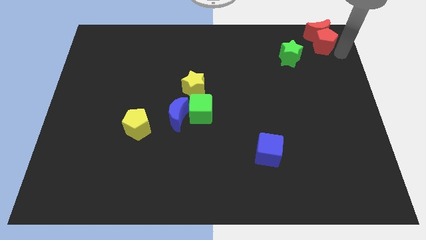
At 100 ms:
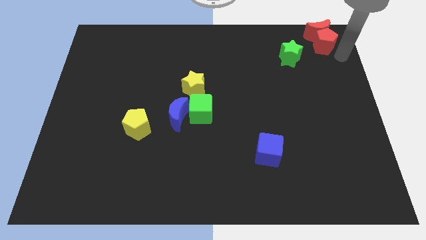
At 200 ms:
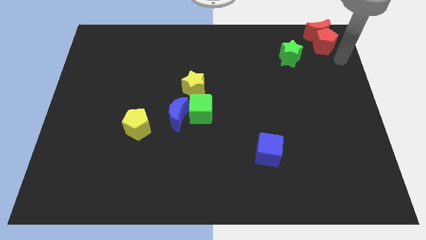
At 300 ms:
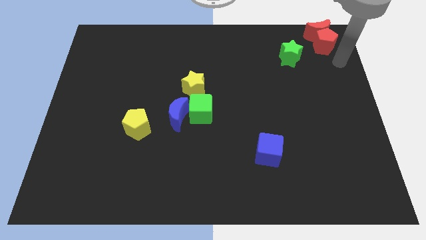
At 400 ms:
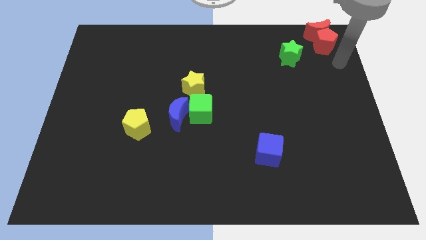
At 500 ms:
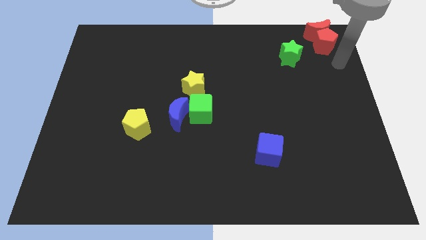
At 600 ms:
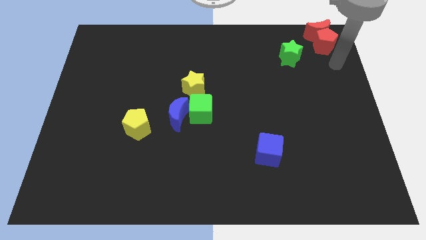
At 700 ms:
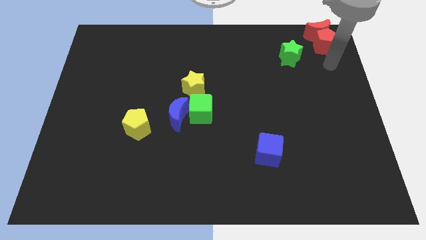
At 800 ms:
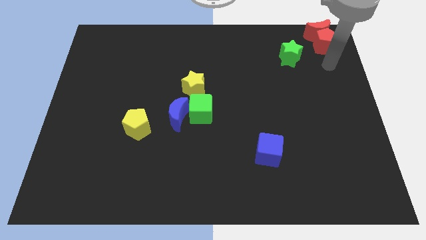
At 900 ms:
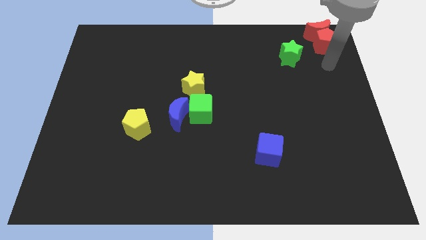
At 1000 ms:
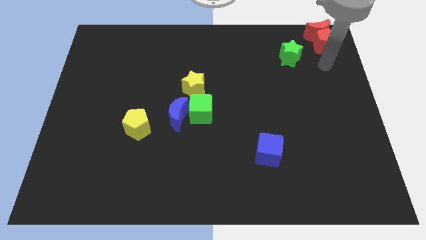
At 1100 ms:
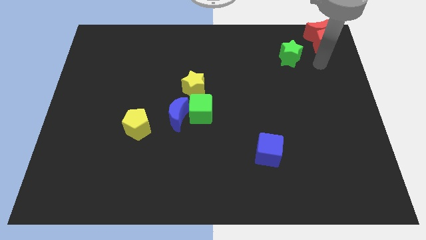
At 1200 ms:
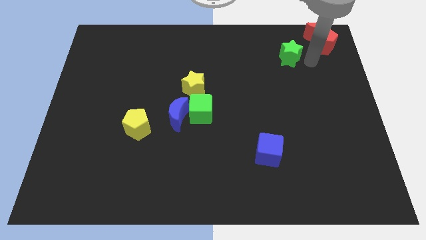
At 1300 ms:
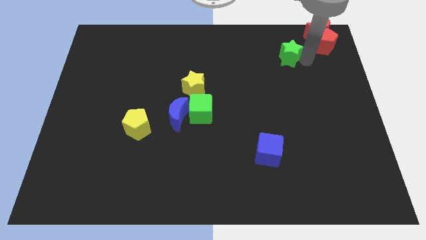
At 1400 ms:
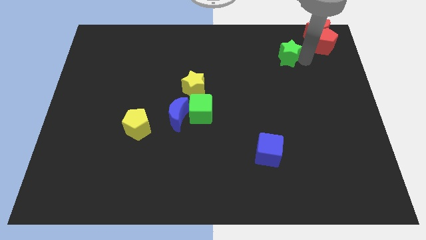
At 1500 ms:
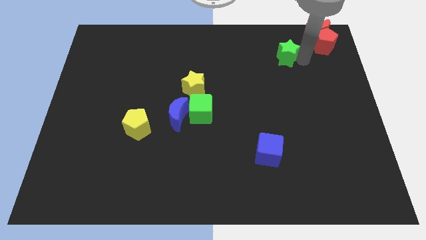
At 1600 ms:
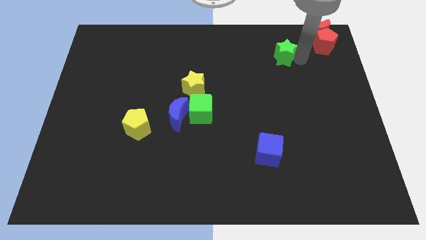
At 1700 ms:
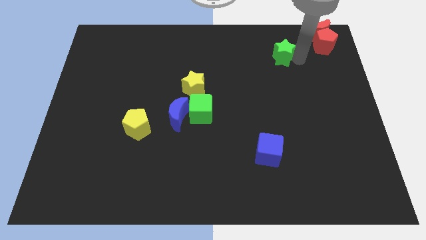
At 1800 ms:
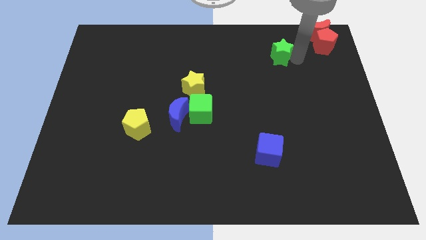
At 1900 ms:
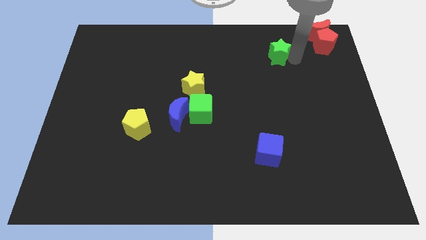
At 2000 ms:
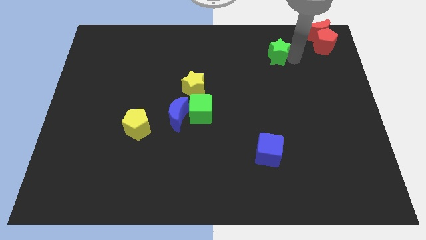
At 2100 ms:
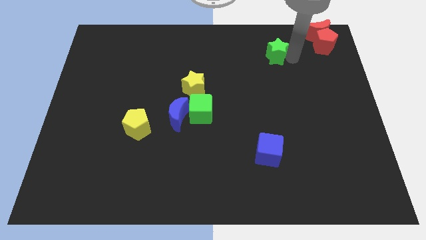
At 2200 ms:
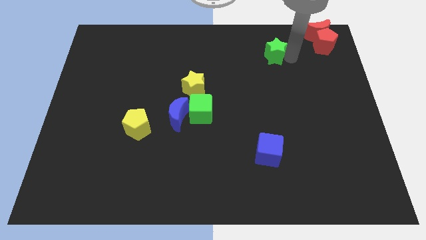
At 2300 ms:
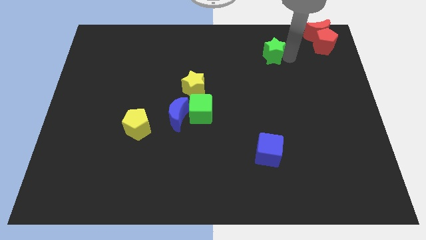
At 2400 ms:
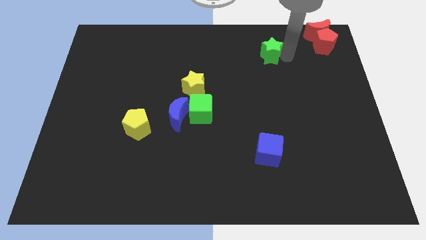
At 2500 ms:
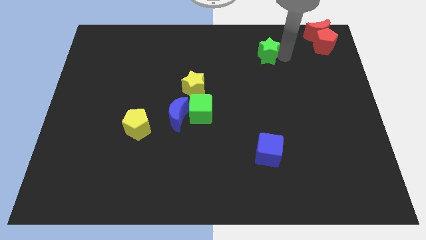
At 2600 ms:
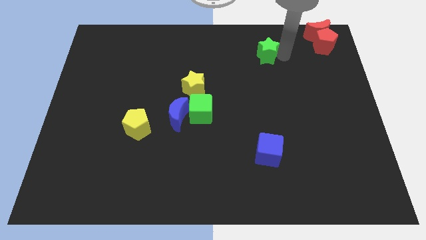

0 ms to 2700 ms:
slide the green star to the left

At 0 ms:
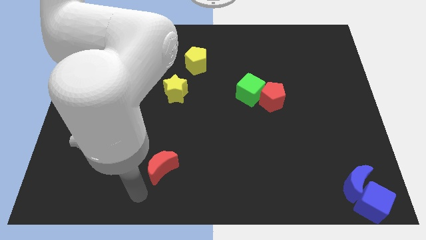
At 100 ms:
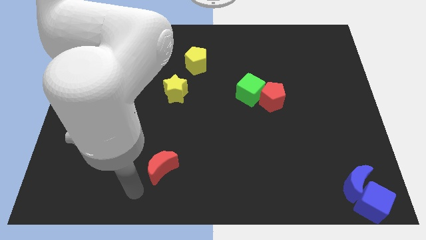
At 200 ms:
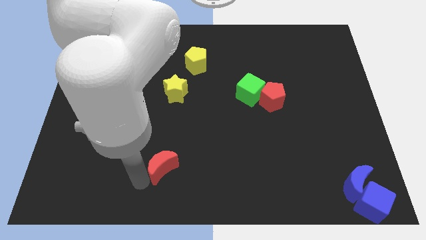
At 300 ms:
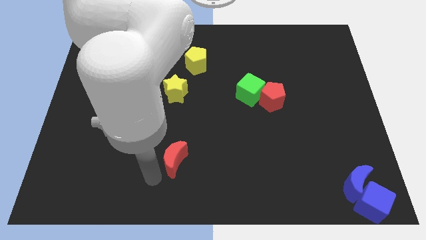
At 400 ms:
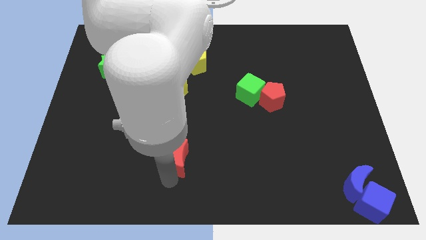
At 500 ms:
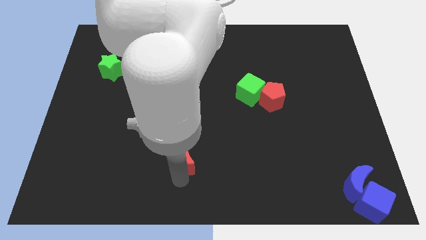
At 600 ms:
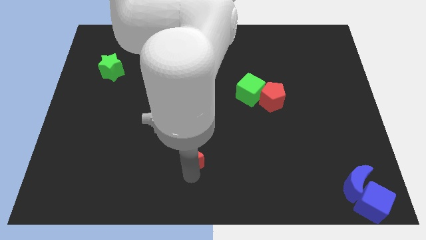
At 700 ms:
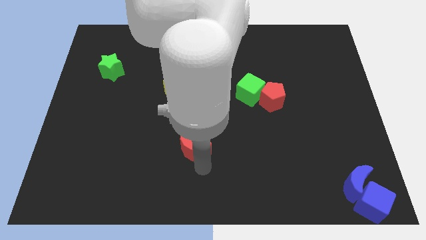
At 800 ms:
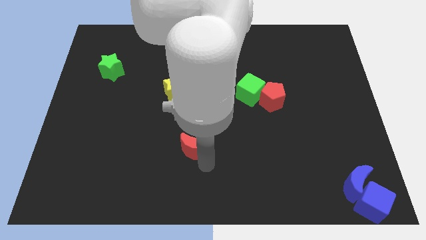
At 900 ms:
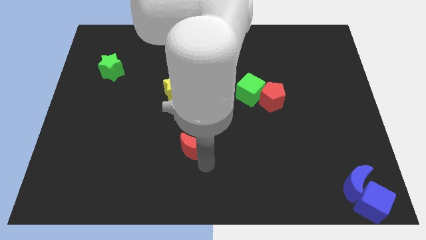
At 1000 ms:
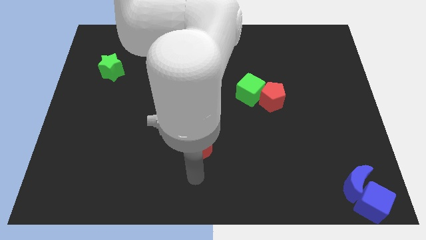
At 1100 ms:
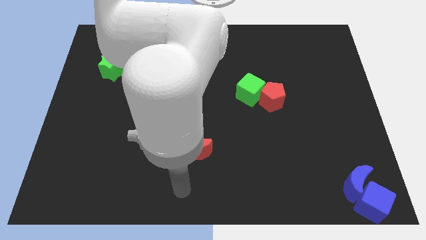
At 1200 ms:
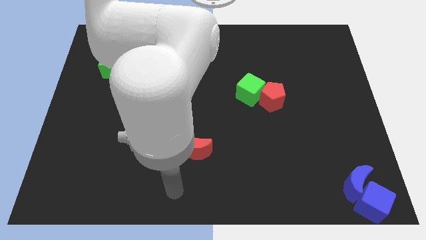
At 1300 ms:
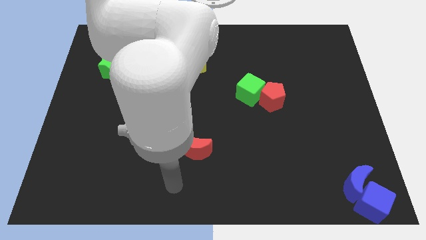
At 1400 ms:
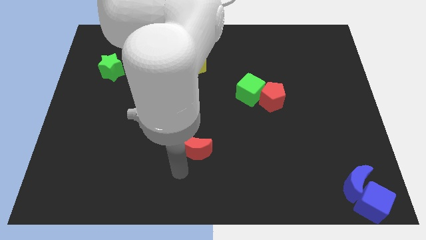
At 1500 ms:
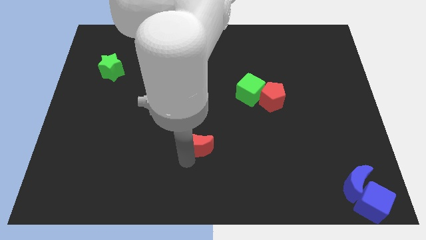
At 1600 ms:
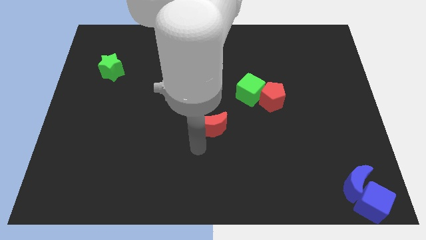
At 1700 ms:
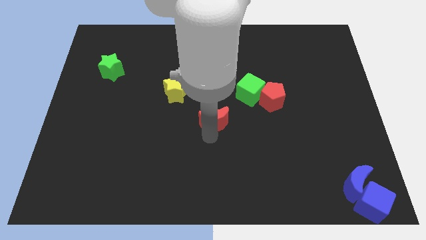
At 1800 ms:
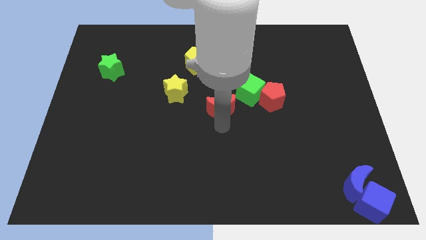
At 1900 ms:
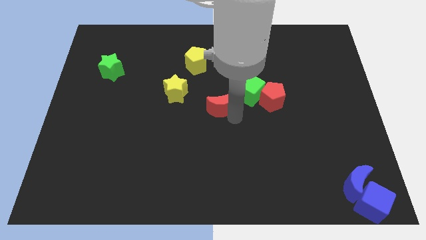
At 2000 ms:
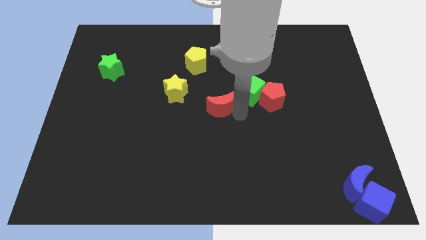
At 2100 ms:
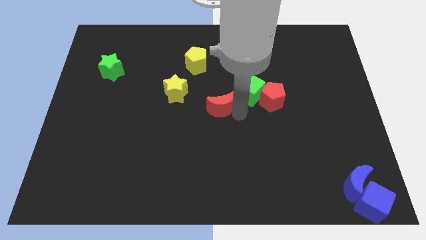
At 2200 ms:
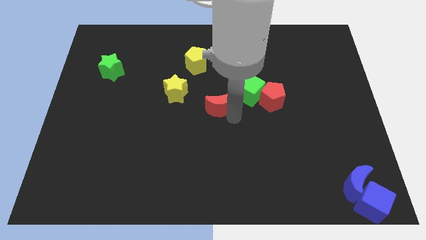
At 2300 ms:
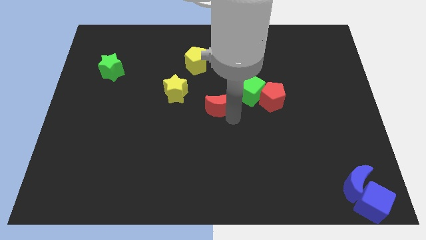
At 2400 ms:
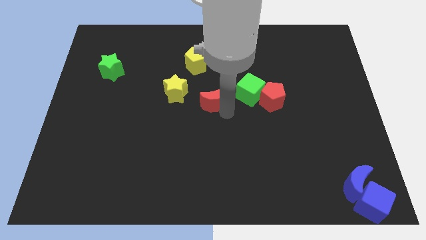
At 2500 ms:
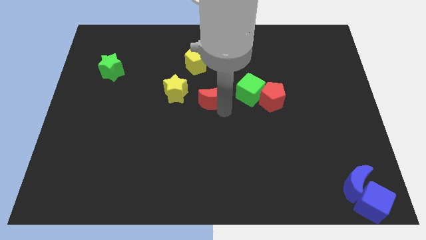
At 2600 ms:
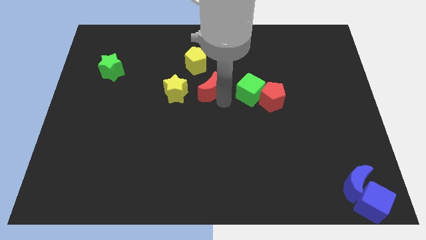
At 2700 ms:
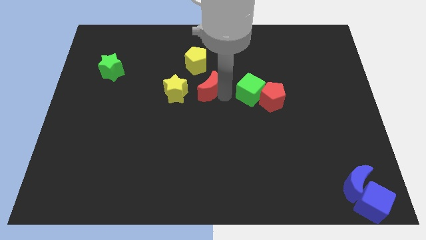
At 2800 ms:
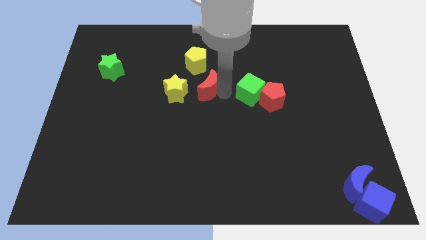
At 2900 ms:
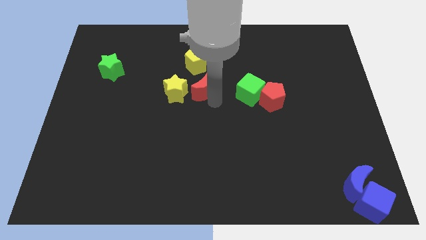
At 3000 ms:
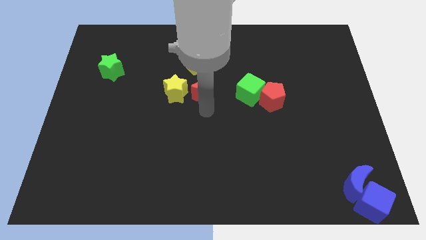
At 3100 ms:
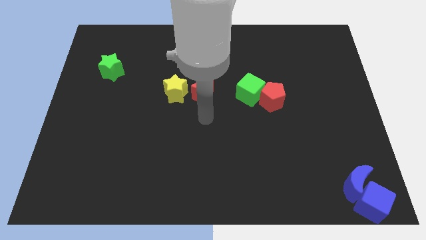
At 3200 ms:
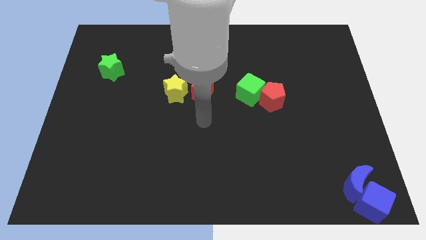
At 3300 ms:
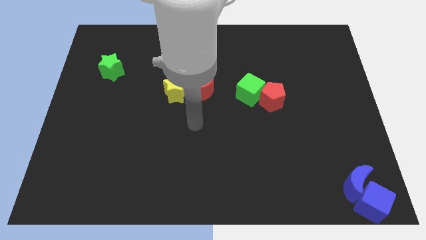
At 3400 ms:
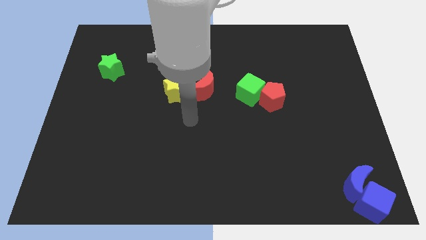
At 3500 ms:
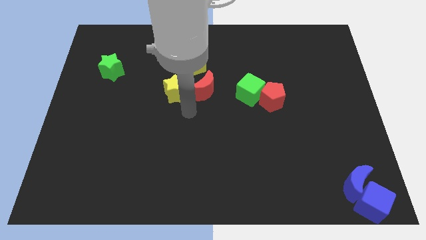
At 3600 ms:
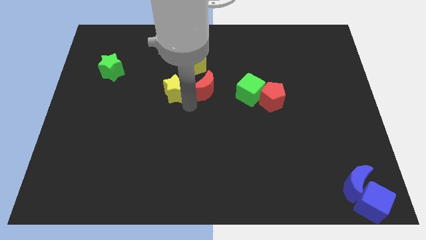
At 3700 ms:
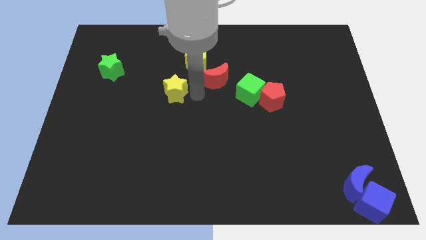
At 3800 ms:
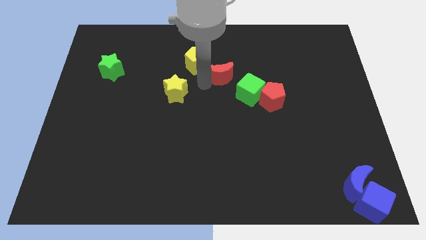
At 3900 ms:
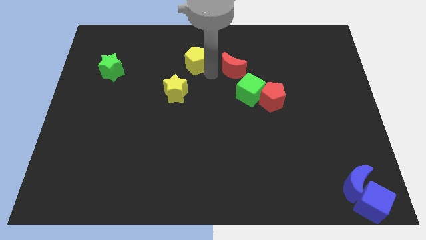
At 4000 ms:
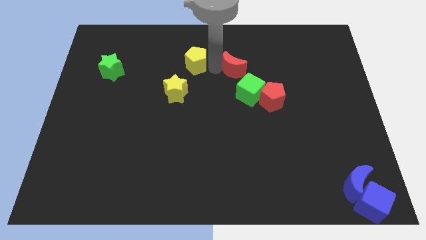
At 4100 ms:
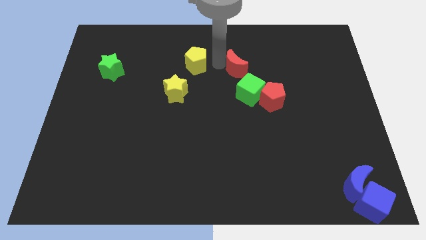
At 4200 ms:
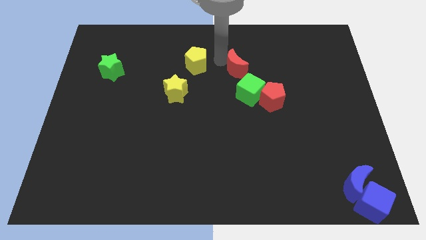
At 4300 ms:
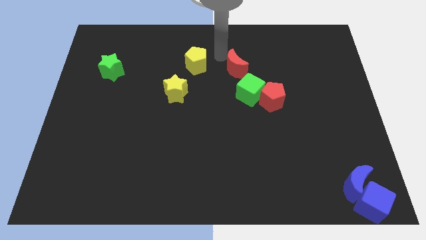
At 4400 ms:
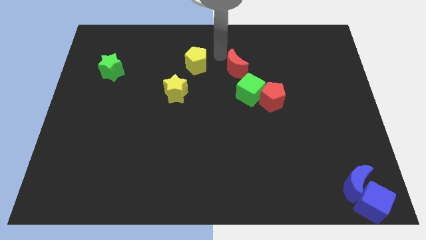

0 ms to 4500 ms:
place the red moon right to the yellow pentagon

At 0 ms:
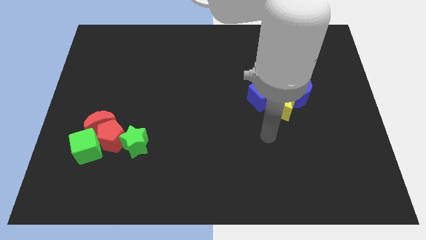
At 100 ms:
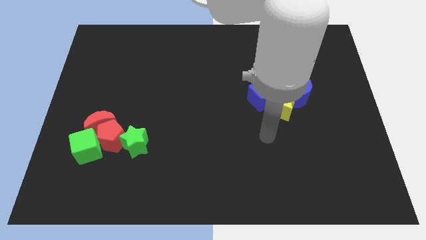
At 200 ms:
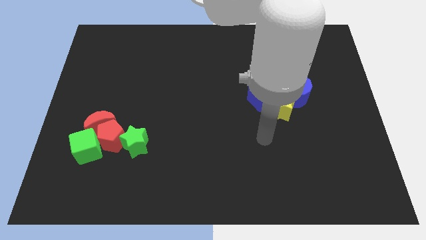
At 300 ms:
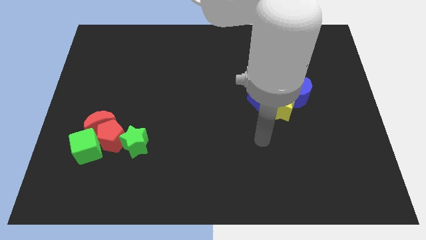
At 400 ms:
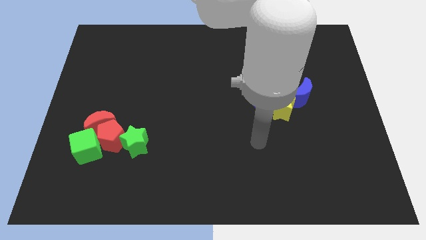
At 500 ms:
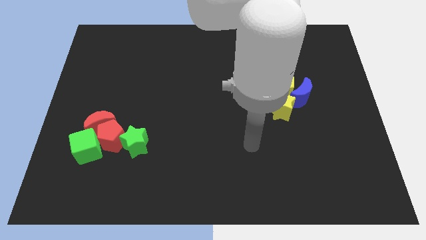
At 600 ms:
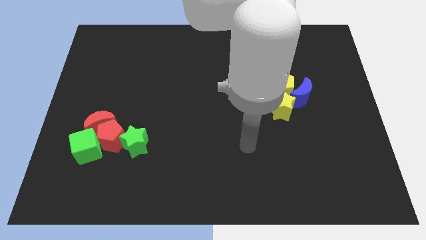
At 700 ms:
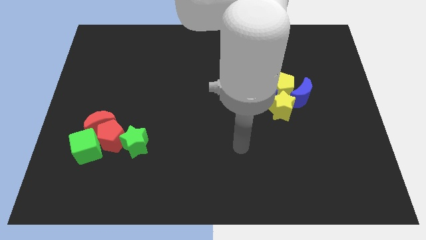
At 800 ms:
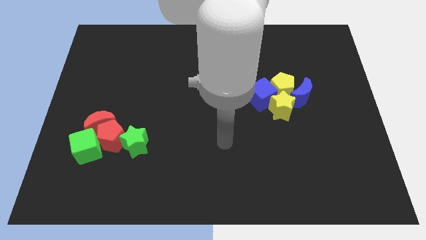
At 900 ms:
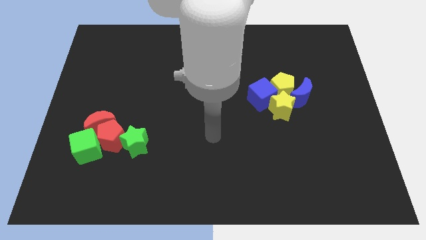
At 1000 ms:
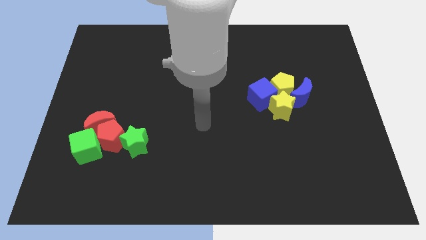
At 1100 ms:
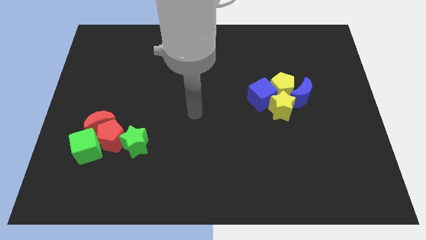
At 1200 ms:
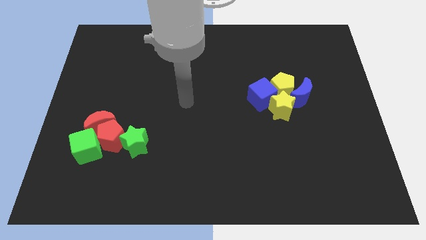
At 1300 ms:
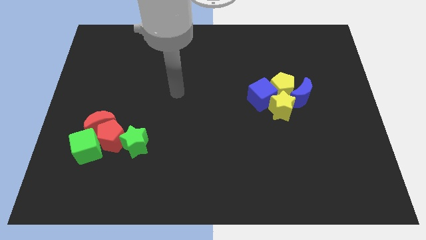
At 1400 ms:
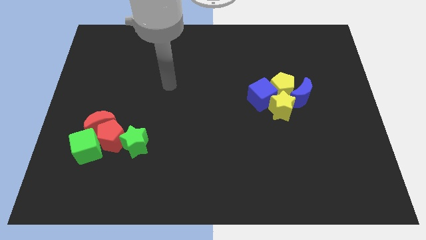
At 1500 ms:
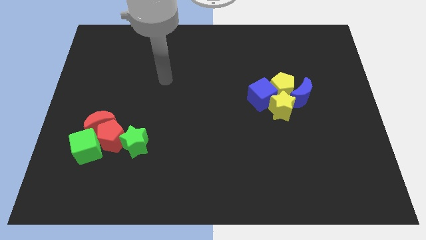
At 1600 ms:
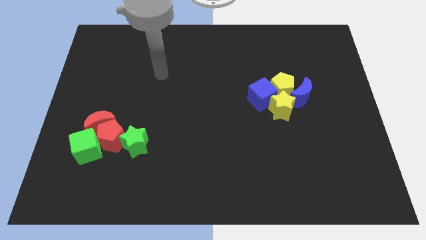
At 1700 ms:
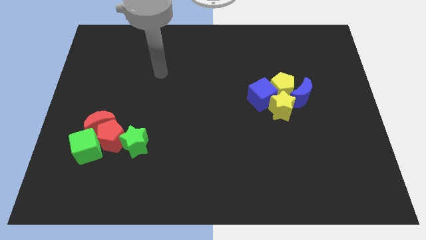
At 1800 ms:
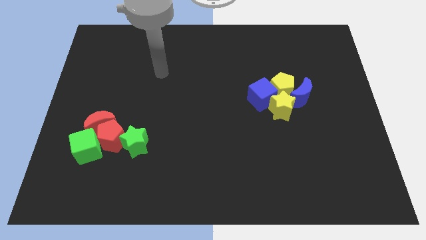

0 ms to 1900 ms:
move your arm away from the yellow star
